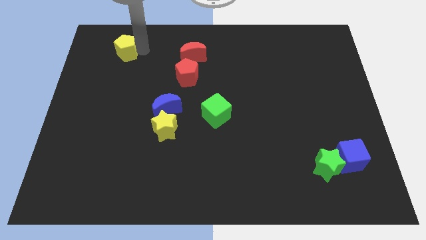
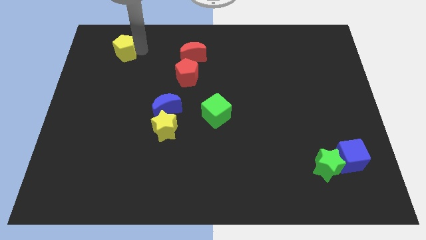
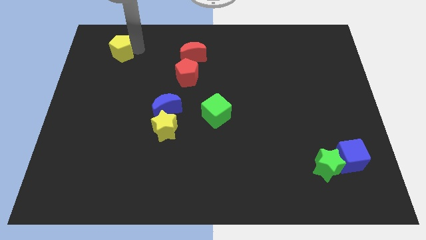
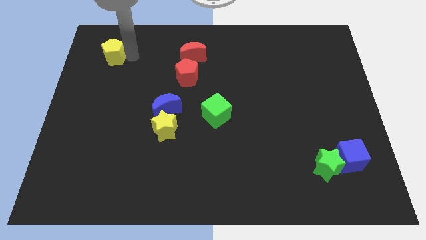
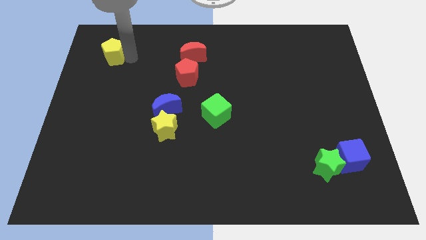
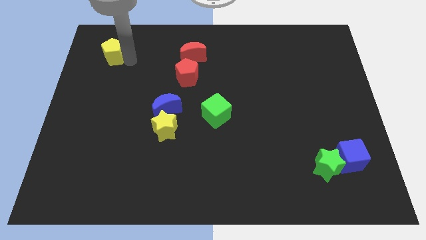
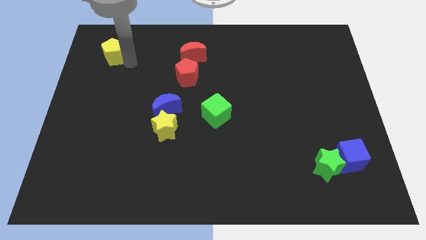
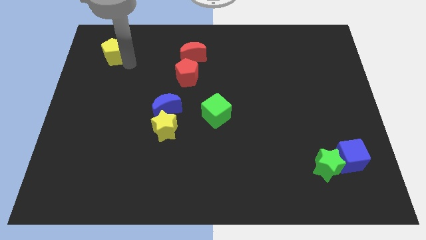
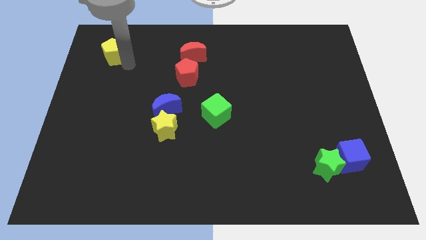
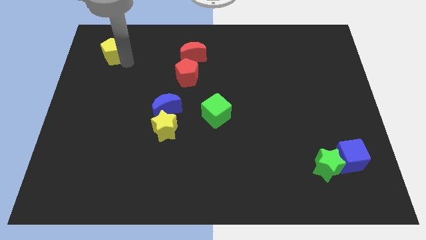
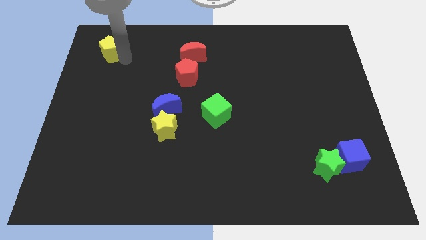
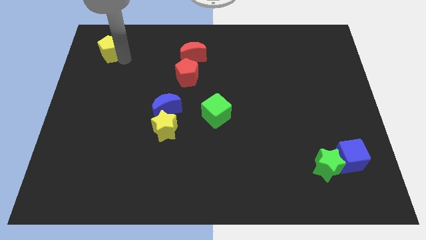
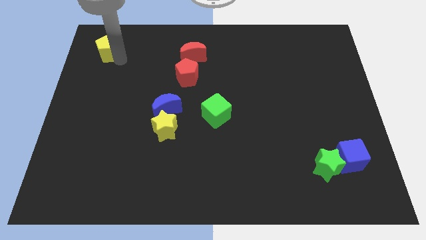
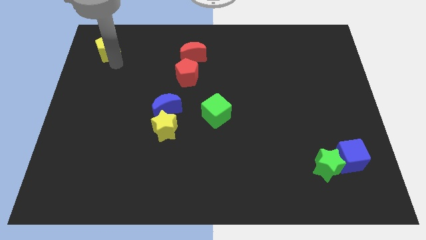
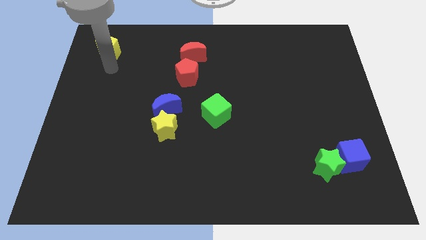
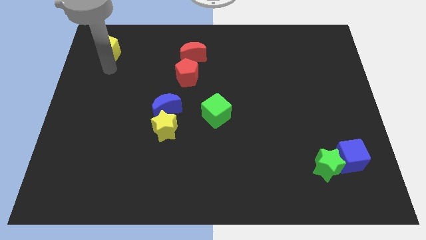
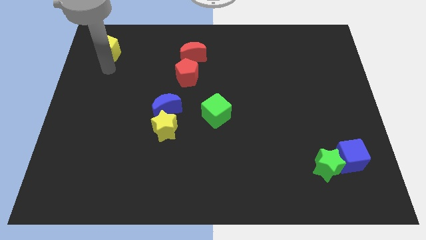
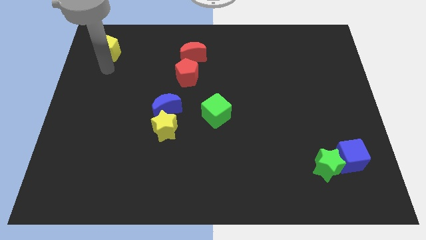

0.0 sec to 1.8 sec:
push the yellow pentagon to the left side of the board

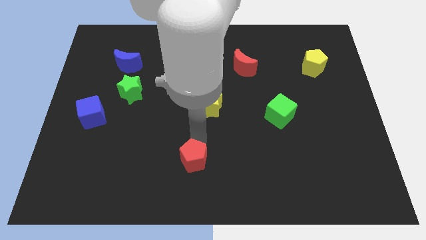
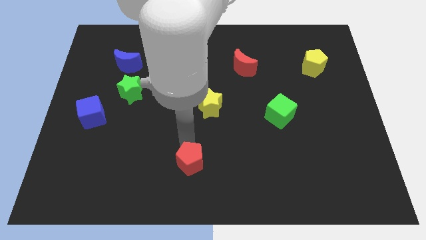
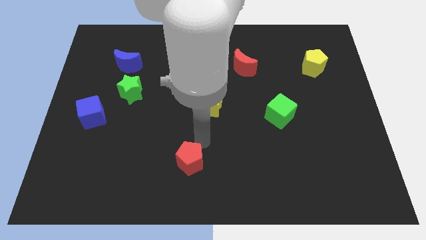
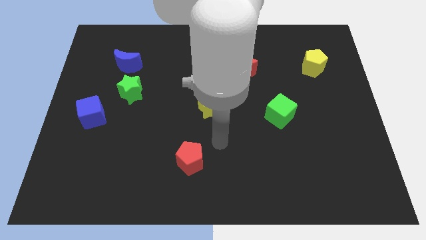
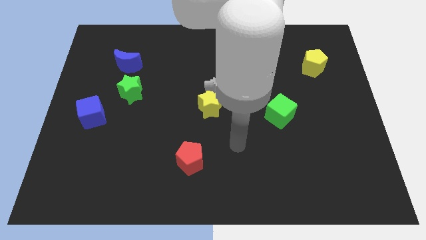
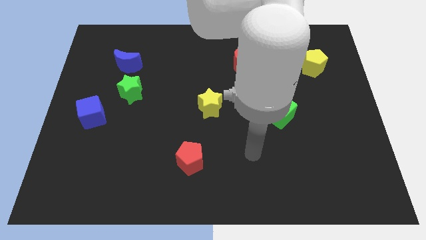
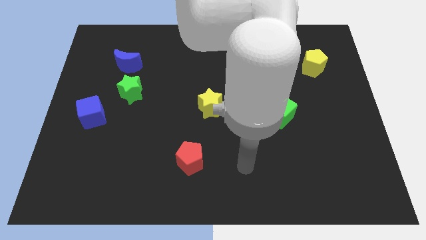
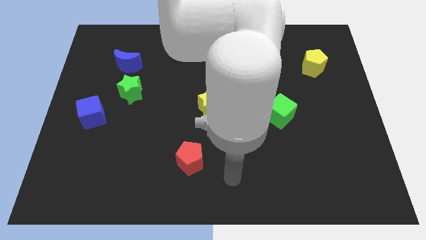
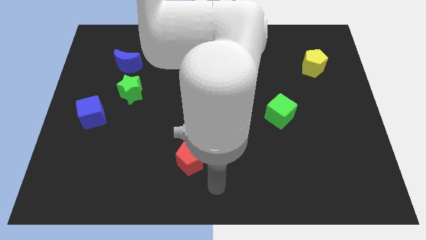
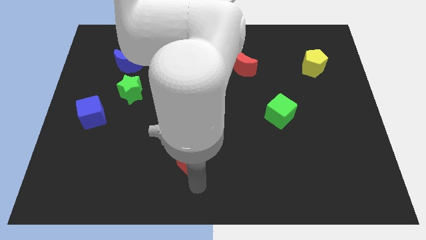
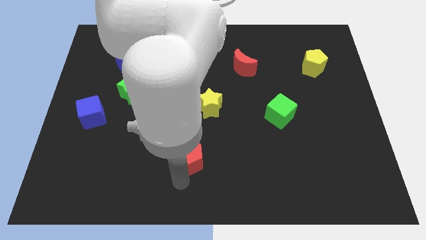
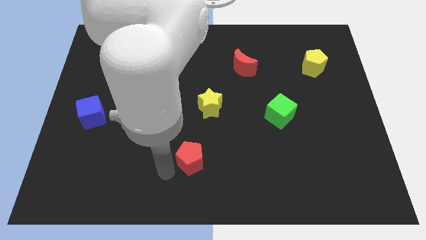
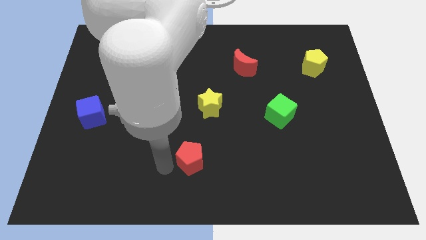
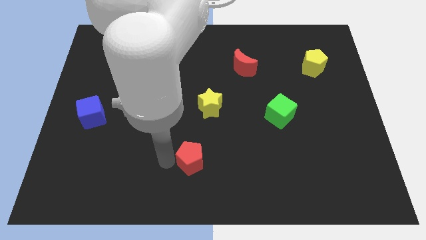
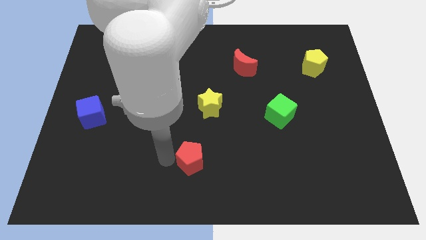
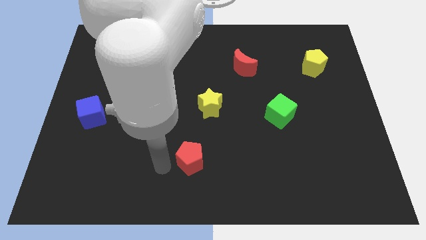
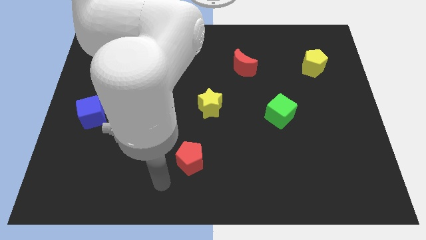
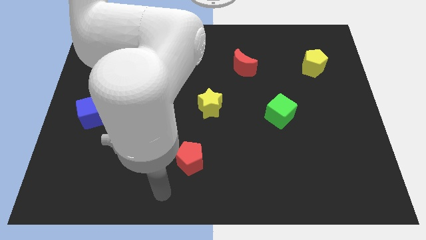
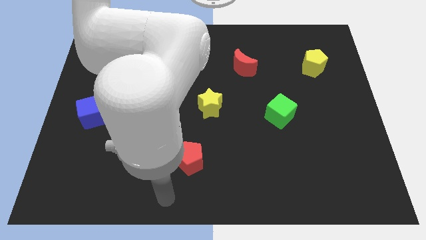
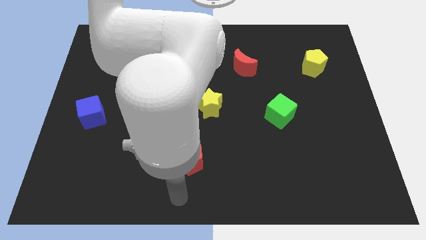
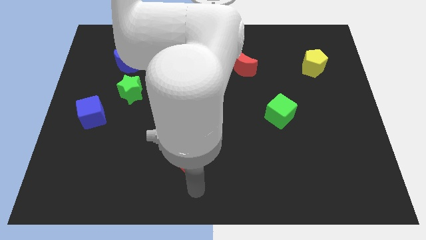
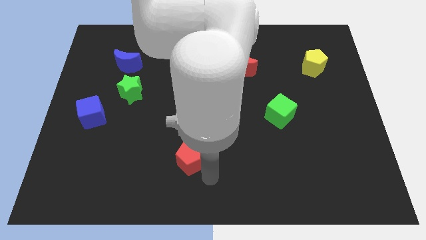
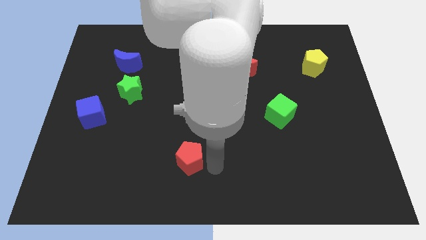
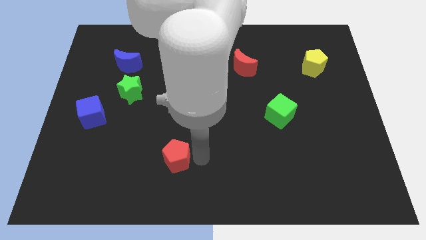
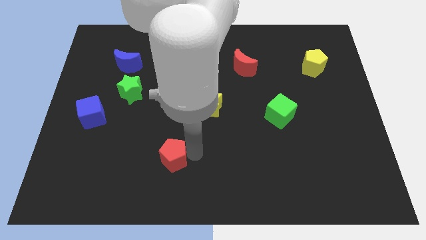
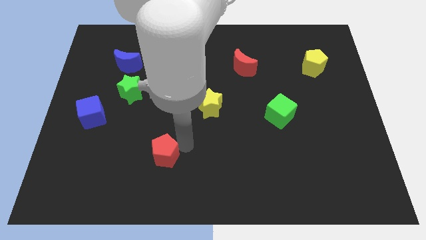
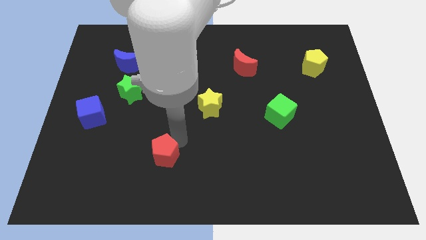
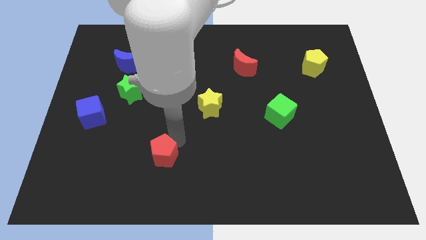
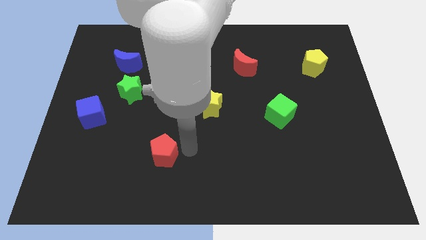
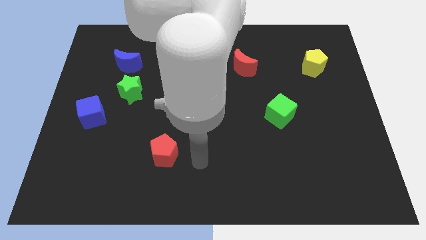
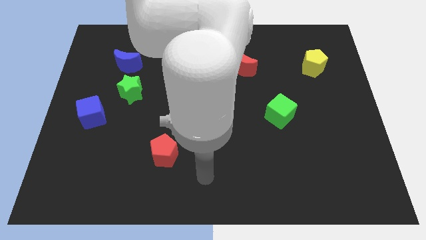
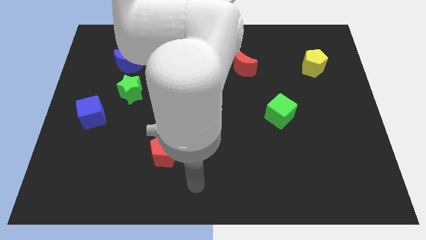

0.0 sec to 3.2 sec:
push the red pentagon diagonally at the bottom left of the yellow star

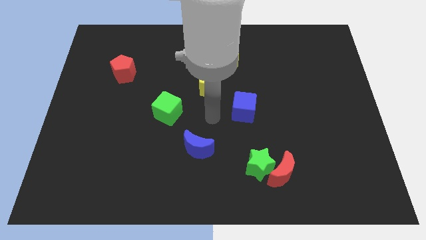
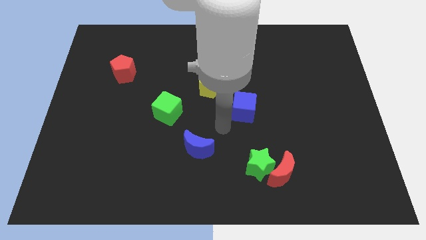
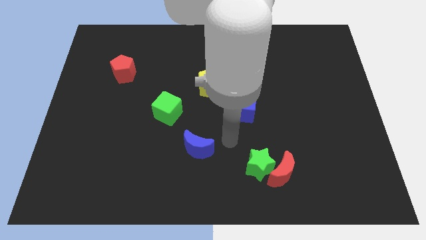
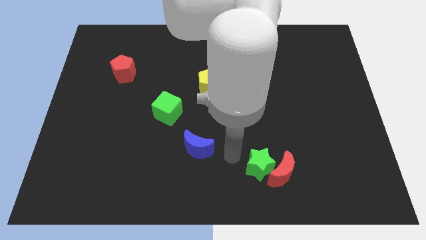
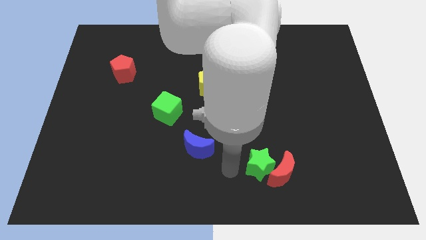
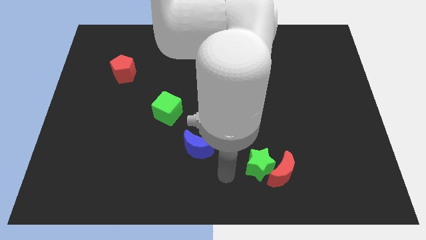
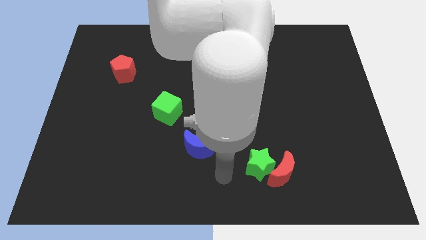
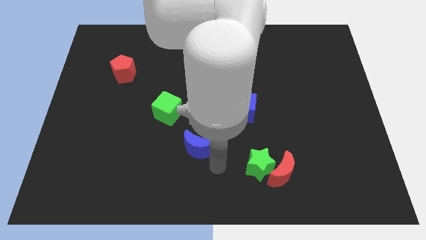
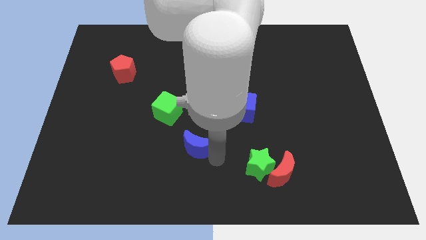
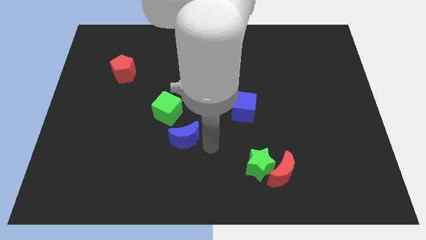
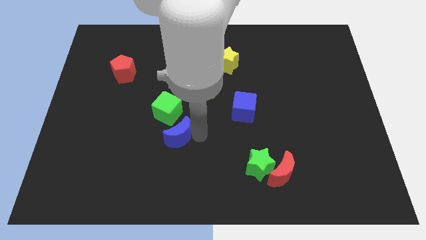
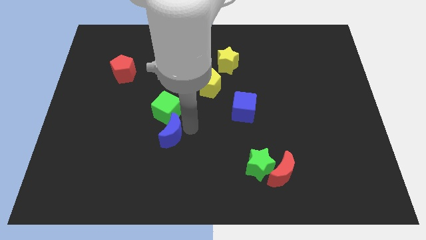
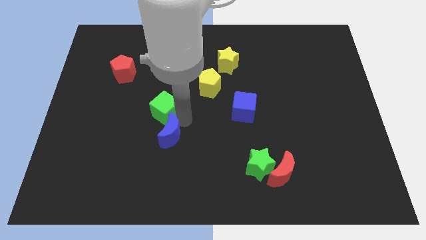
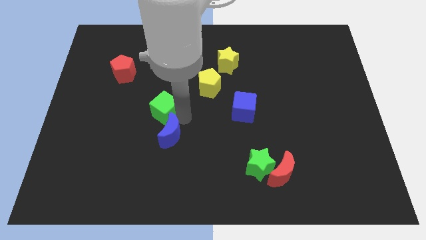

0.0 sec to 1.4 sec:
push the blue crescent to the bottom of the green cube

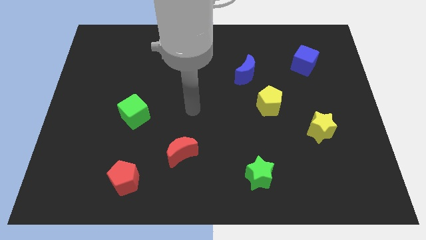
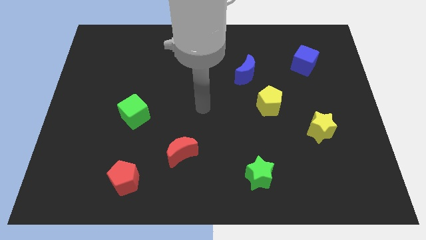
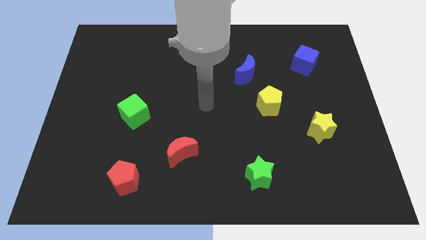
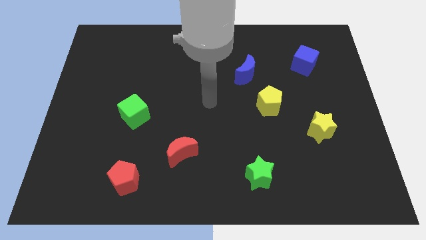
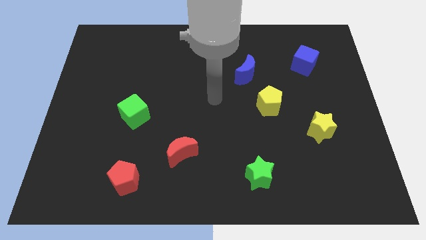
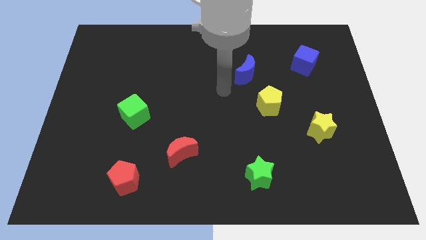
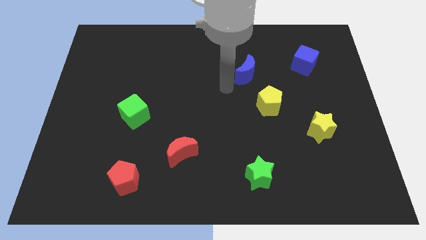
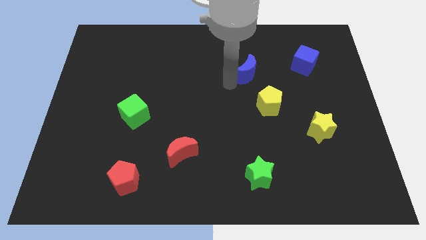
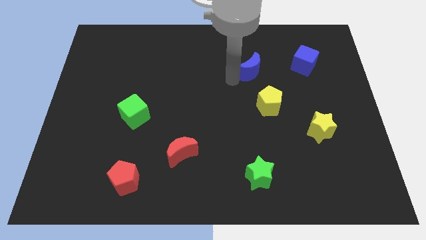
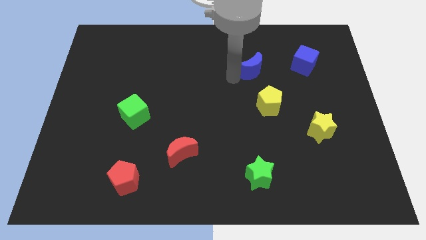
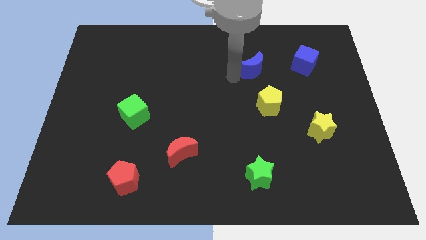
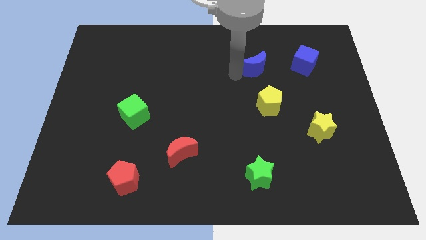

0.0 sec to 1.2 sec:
push the blue crescent towards the blue cube

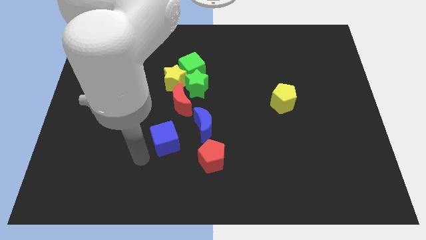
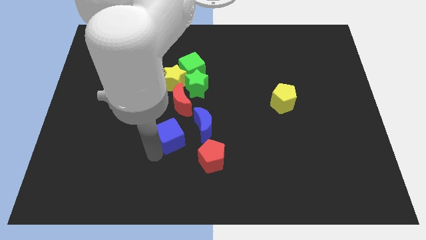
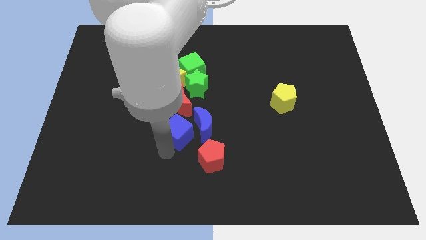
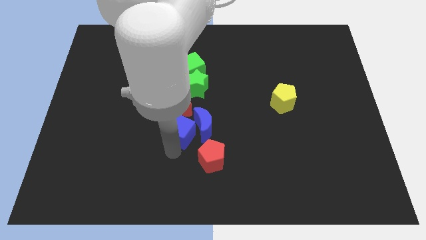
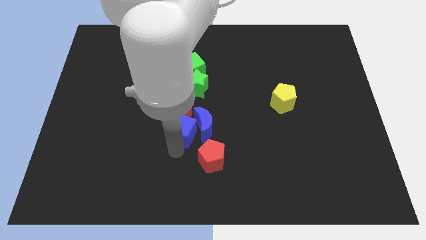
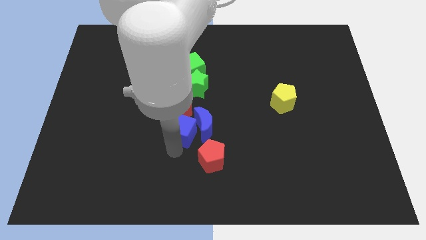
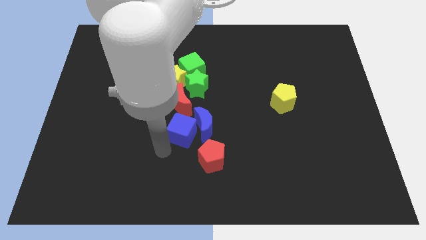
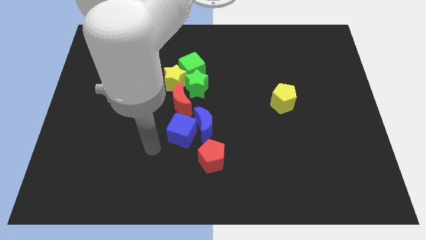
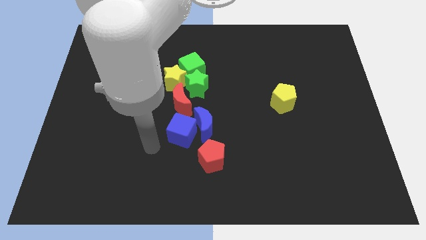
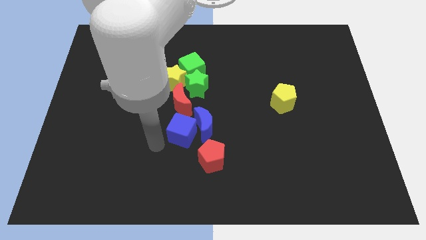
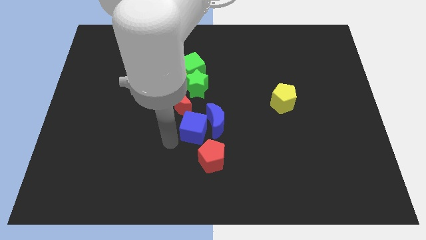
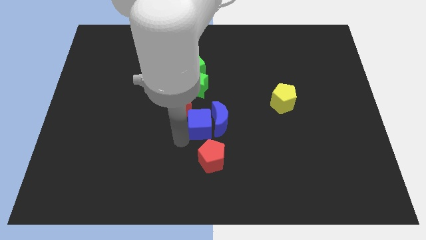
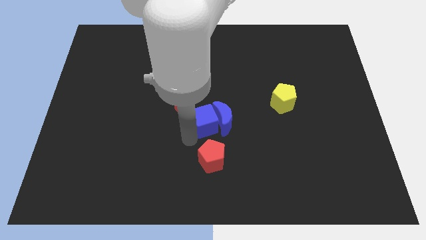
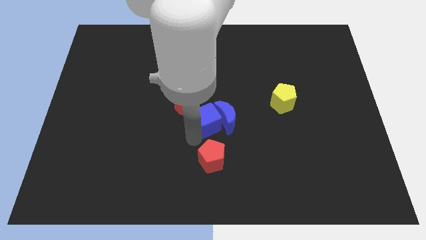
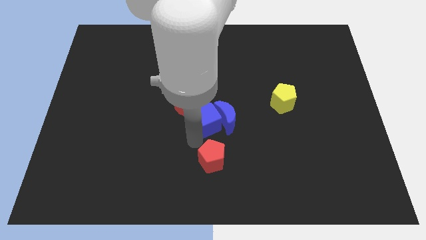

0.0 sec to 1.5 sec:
push the blue cube into the blue moon
